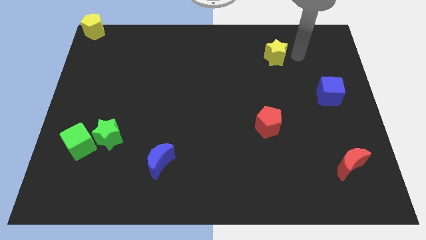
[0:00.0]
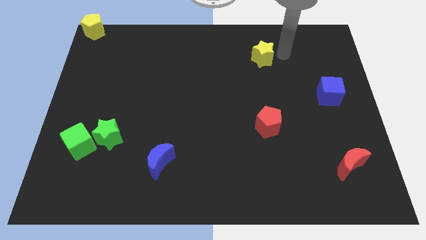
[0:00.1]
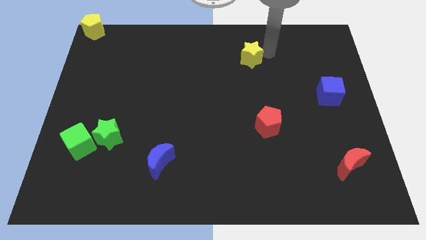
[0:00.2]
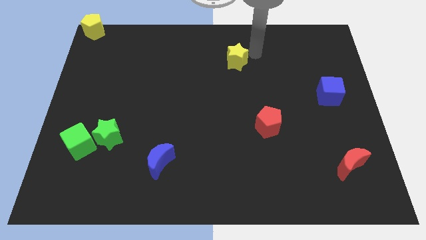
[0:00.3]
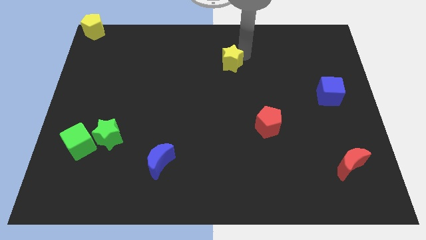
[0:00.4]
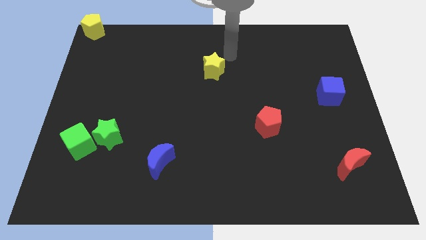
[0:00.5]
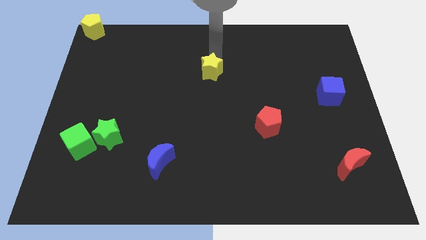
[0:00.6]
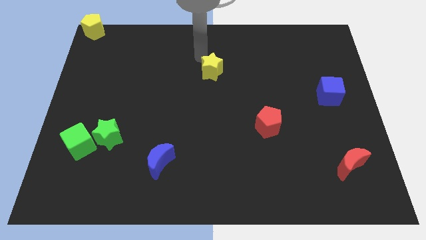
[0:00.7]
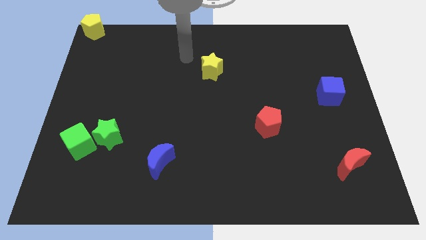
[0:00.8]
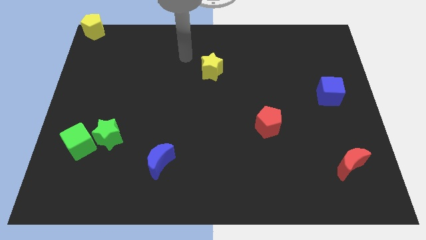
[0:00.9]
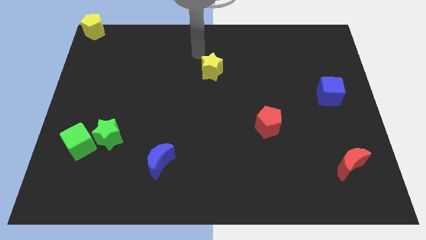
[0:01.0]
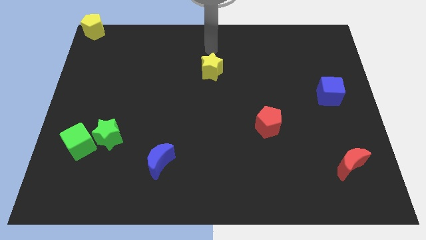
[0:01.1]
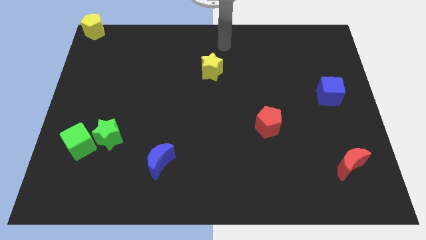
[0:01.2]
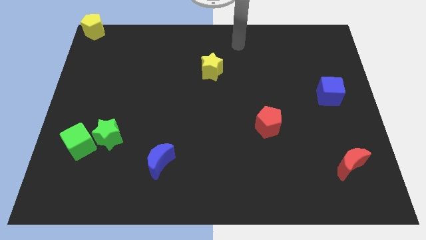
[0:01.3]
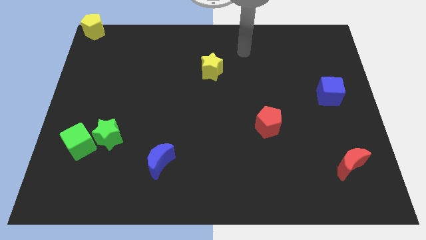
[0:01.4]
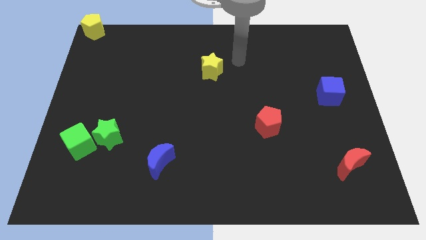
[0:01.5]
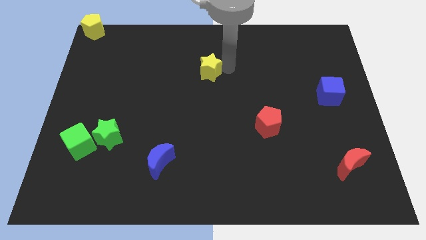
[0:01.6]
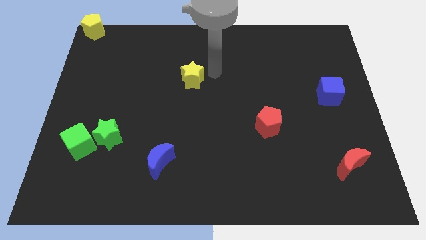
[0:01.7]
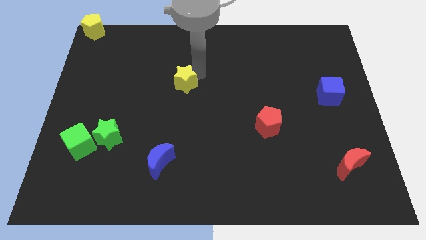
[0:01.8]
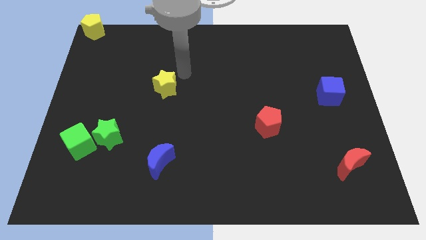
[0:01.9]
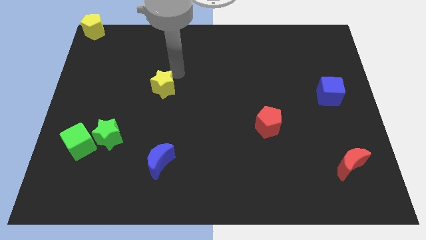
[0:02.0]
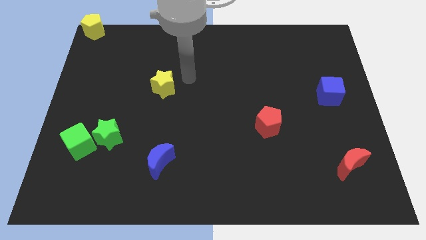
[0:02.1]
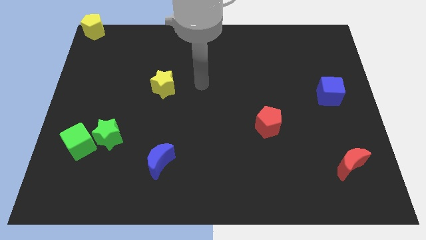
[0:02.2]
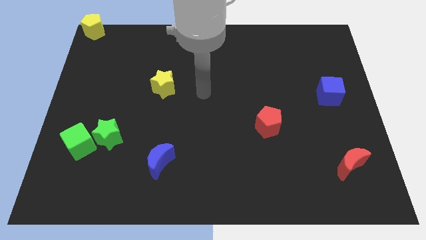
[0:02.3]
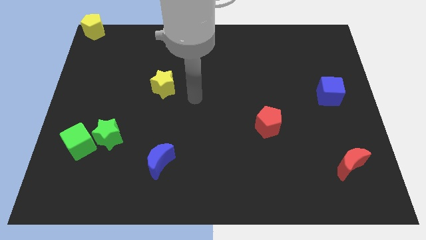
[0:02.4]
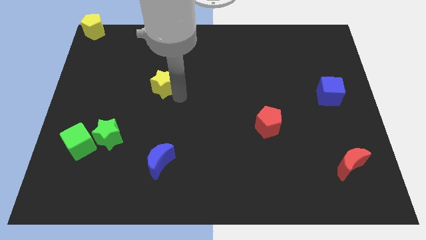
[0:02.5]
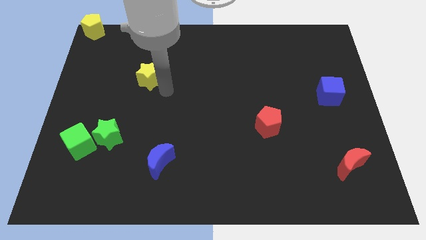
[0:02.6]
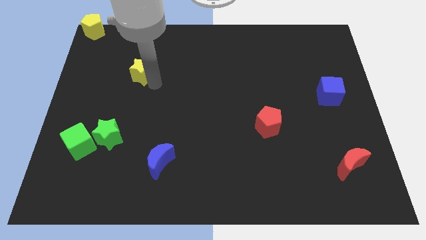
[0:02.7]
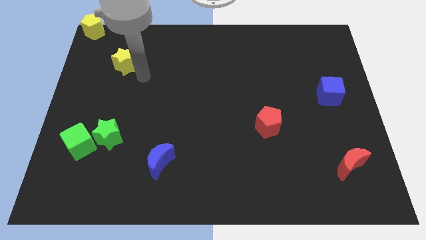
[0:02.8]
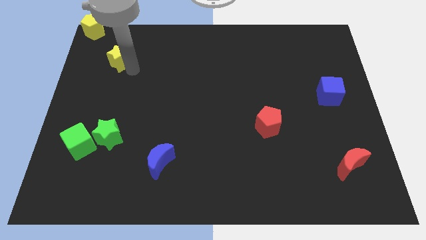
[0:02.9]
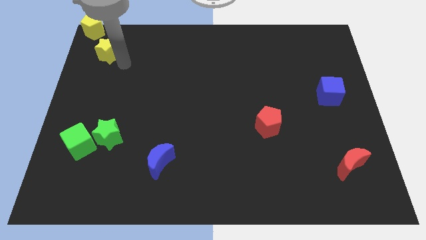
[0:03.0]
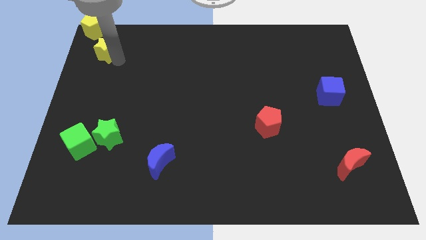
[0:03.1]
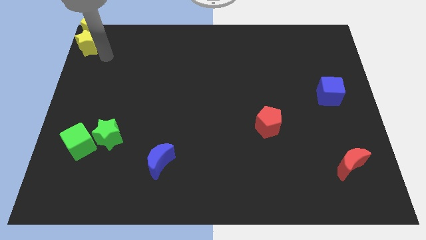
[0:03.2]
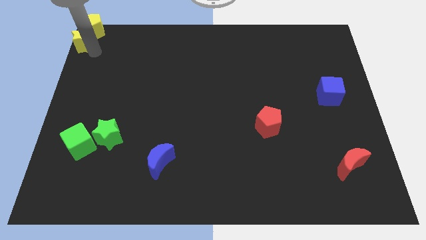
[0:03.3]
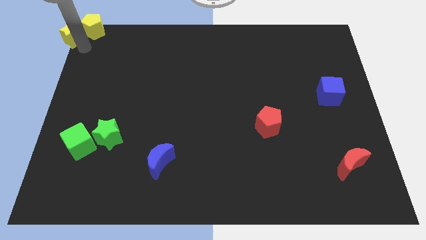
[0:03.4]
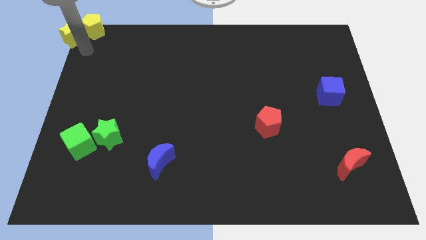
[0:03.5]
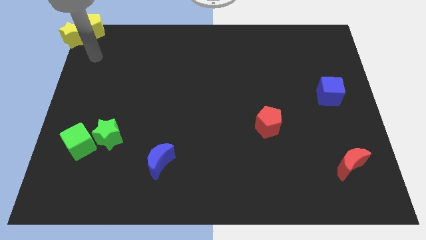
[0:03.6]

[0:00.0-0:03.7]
place the yellow star left to the yellow pentagon

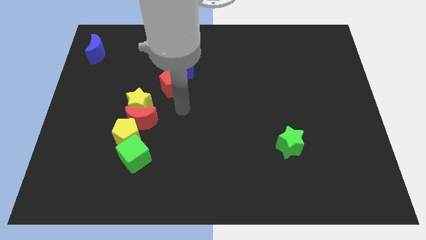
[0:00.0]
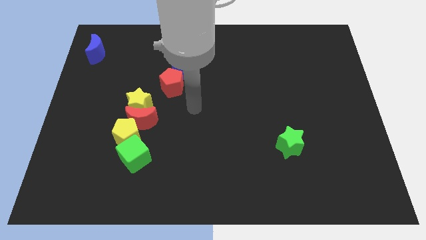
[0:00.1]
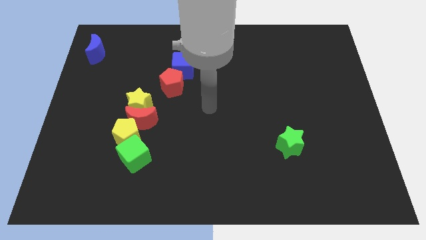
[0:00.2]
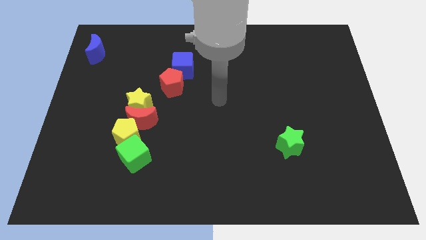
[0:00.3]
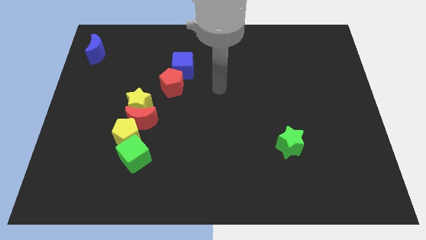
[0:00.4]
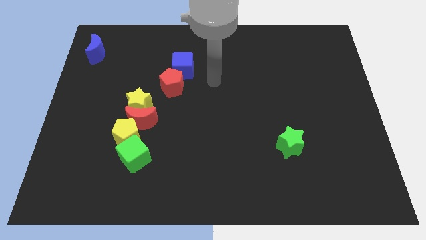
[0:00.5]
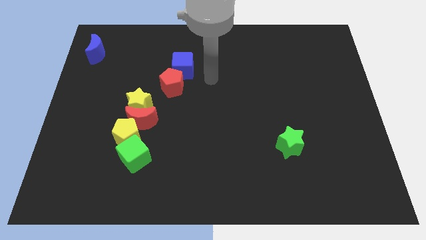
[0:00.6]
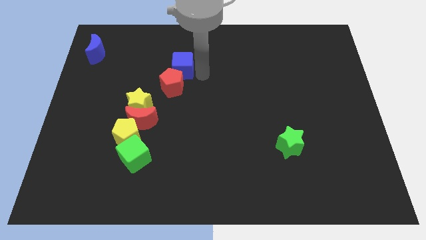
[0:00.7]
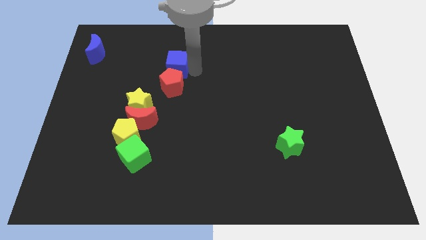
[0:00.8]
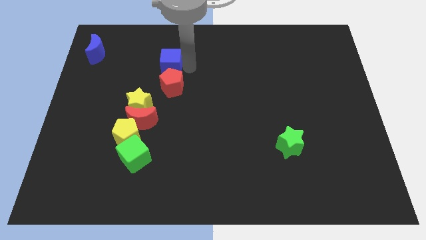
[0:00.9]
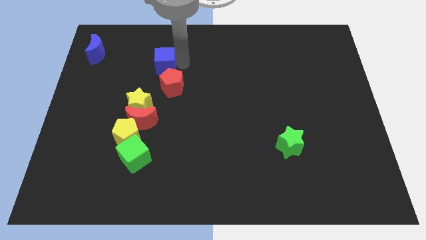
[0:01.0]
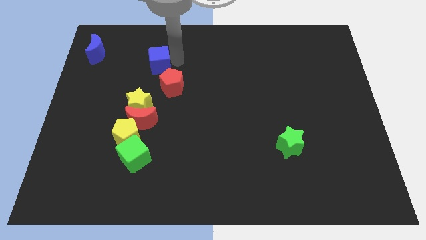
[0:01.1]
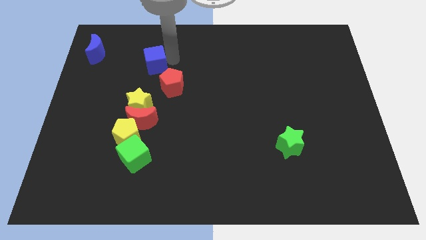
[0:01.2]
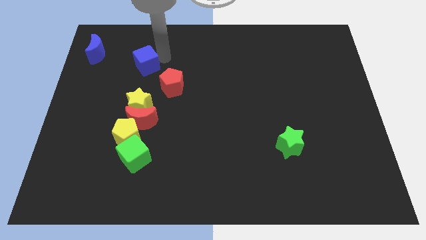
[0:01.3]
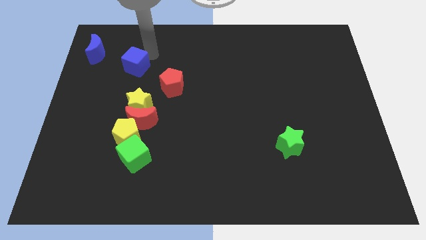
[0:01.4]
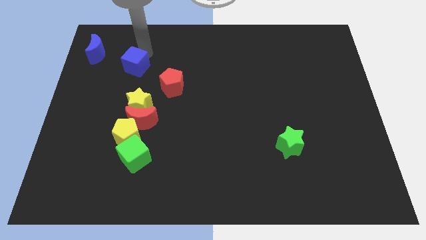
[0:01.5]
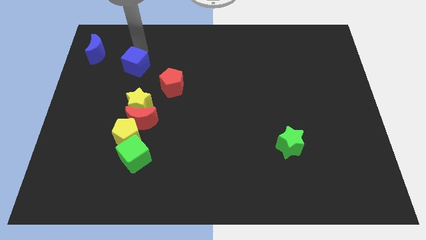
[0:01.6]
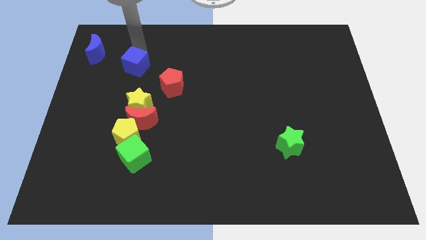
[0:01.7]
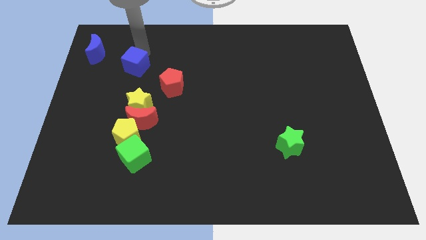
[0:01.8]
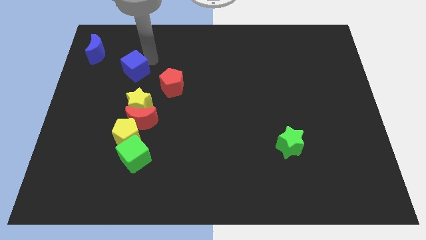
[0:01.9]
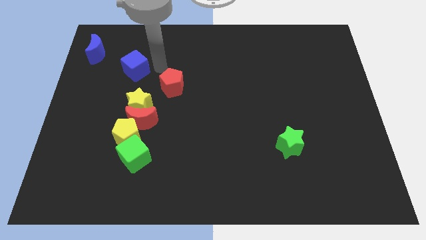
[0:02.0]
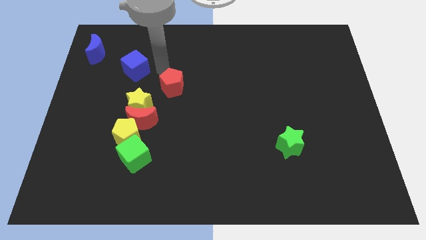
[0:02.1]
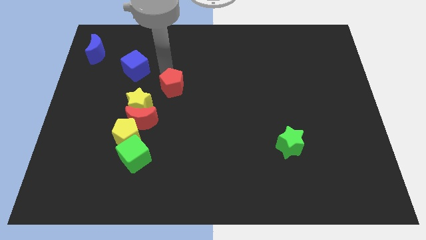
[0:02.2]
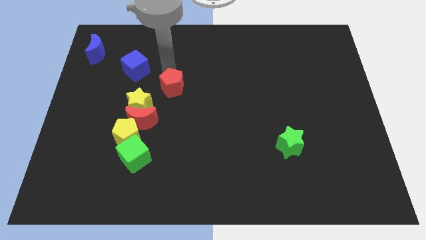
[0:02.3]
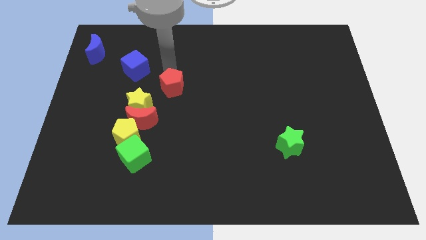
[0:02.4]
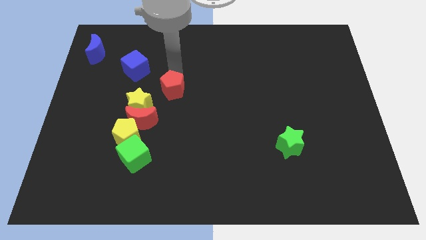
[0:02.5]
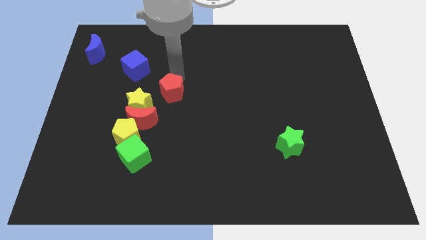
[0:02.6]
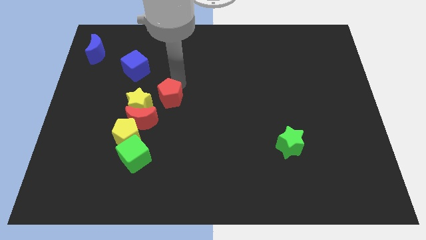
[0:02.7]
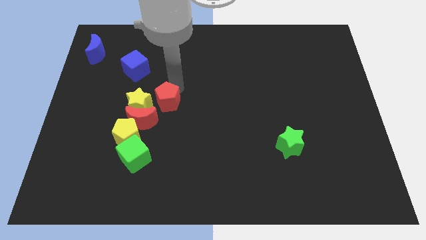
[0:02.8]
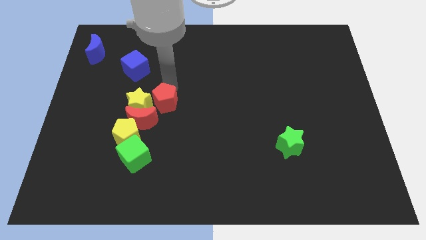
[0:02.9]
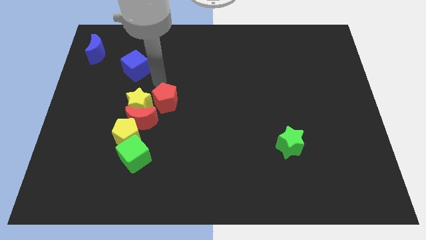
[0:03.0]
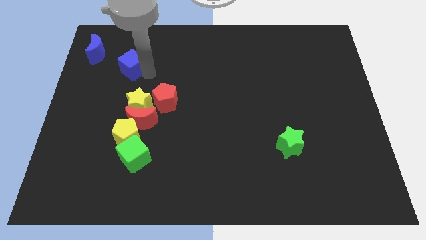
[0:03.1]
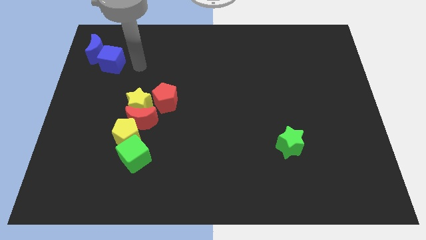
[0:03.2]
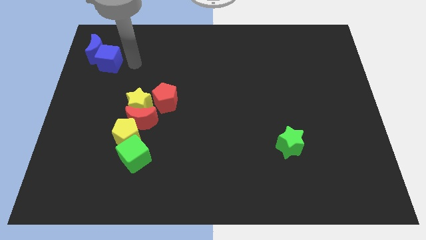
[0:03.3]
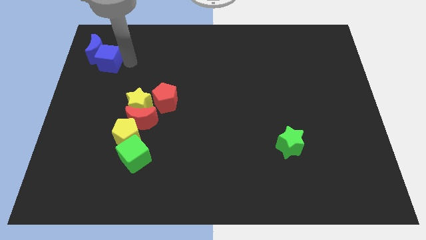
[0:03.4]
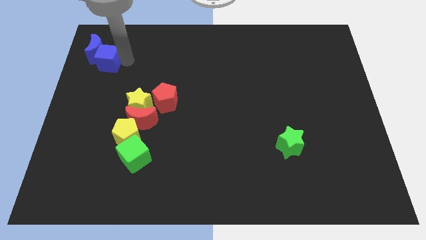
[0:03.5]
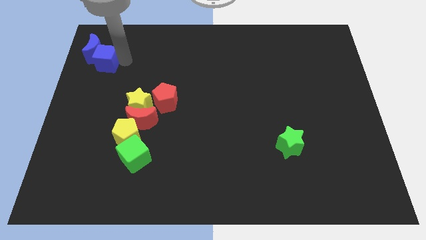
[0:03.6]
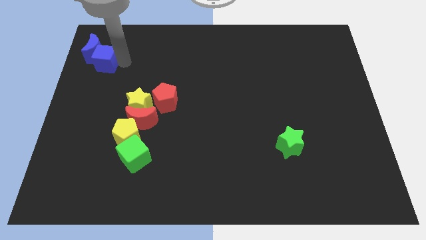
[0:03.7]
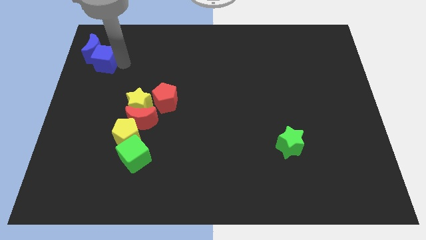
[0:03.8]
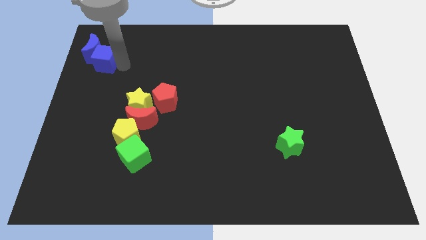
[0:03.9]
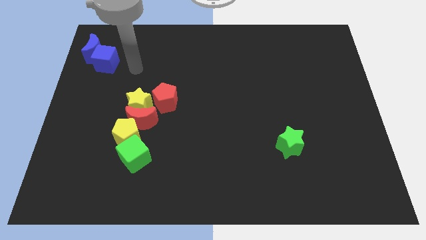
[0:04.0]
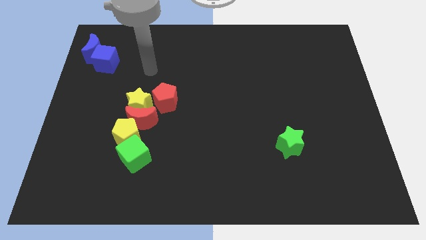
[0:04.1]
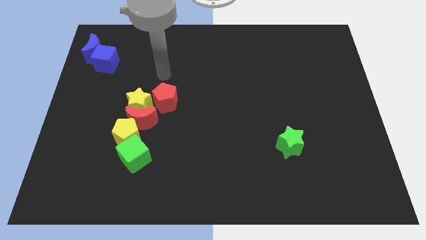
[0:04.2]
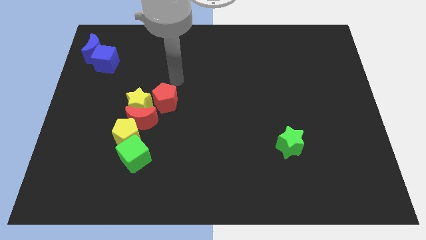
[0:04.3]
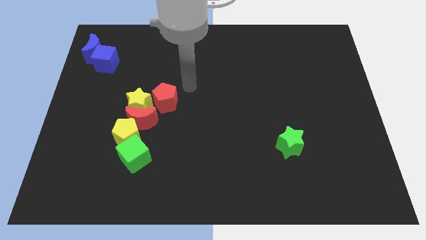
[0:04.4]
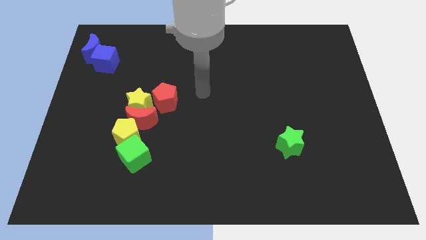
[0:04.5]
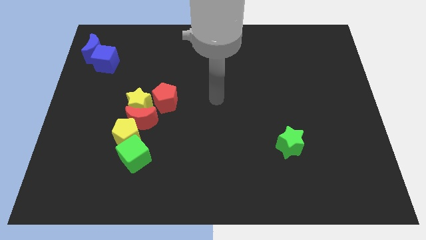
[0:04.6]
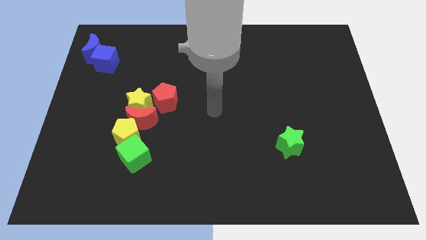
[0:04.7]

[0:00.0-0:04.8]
push blue cube below blue moon

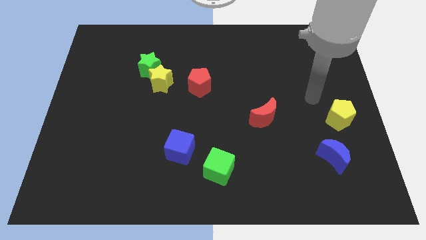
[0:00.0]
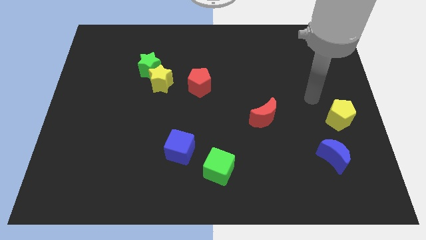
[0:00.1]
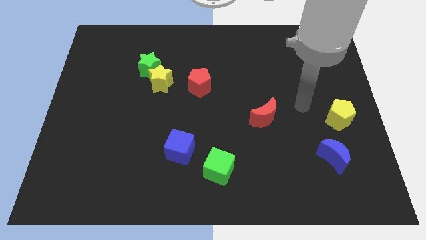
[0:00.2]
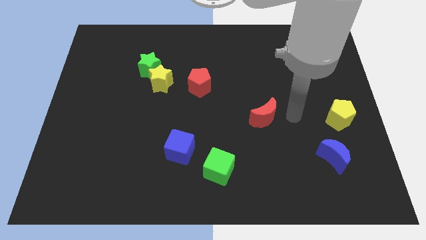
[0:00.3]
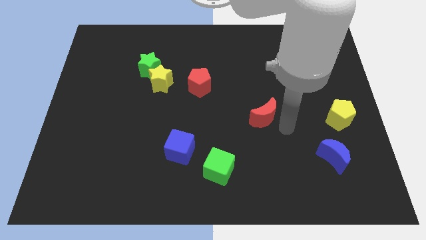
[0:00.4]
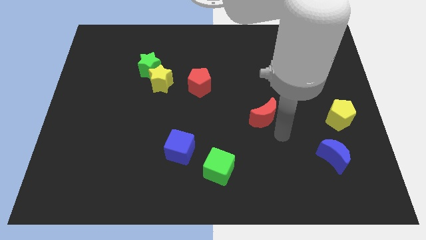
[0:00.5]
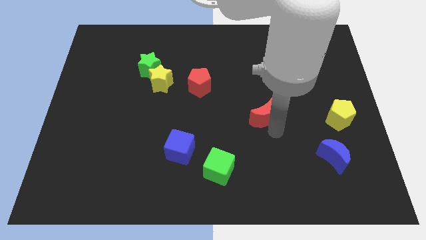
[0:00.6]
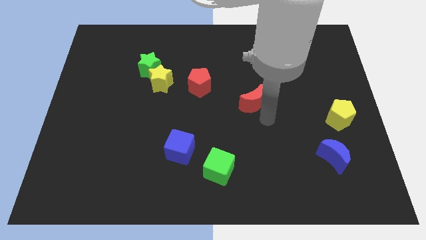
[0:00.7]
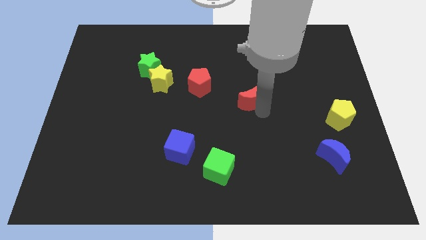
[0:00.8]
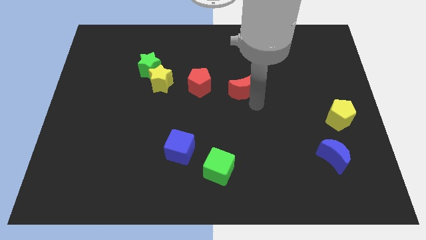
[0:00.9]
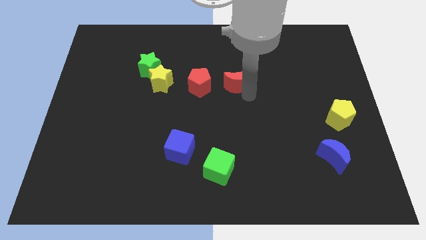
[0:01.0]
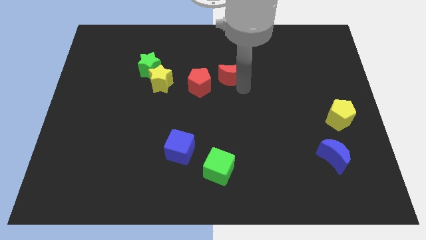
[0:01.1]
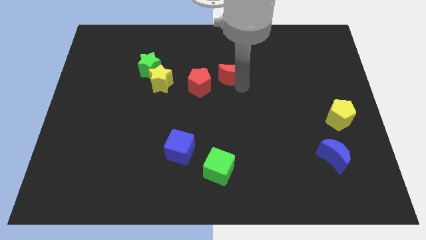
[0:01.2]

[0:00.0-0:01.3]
move the red crescent right to the red pentagon
